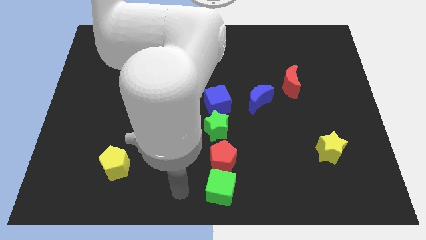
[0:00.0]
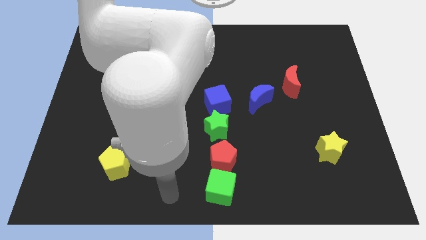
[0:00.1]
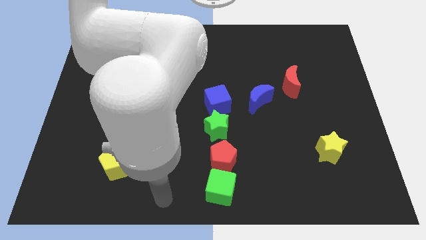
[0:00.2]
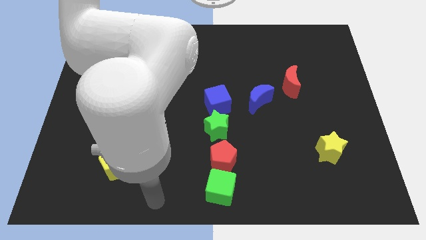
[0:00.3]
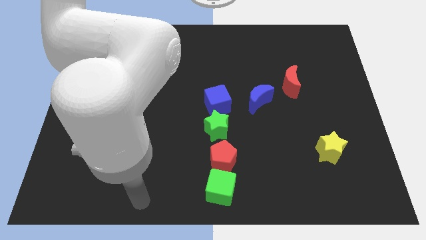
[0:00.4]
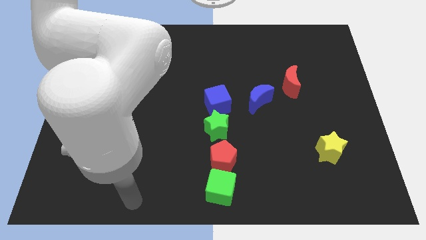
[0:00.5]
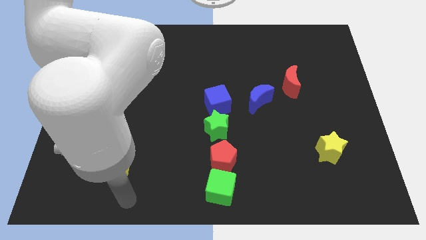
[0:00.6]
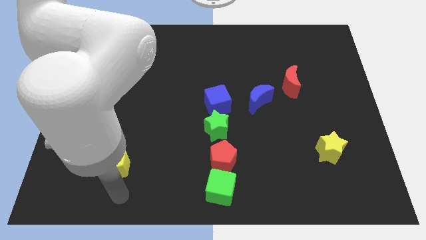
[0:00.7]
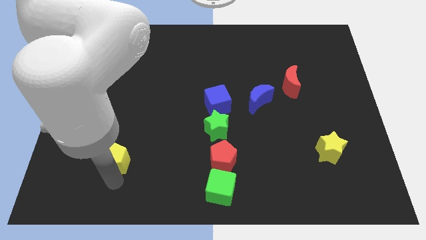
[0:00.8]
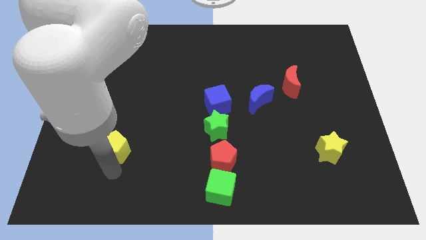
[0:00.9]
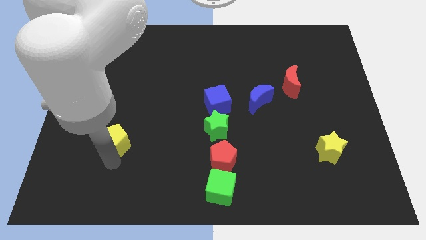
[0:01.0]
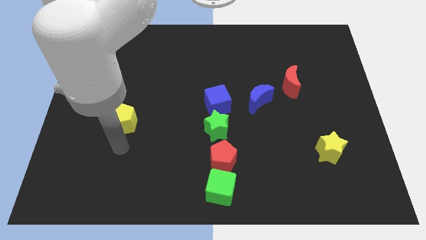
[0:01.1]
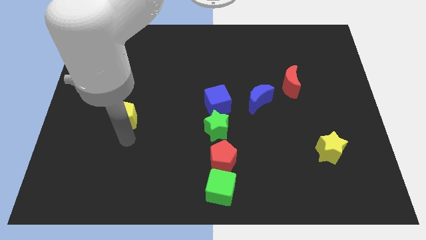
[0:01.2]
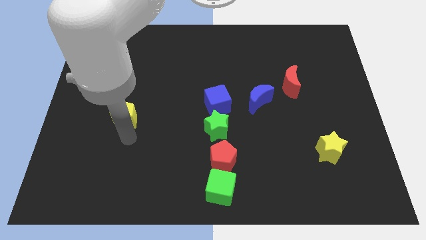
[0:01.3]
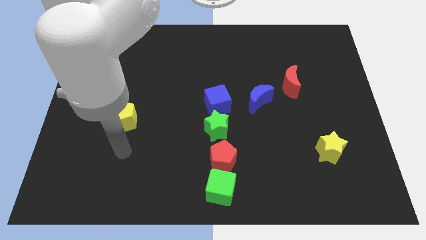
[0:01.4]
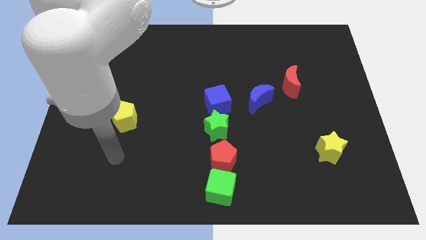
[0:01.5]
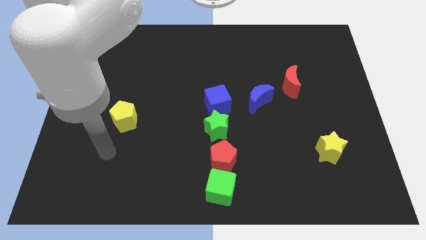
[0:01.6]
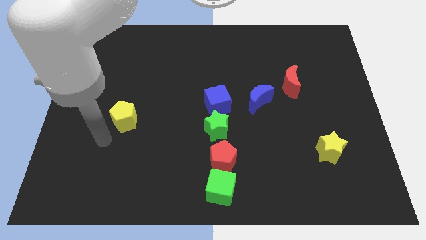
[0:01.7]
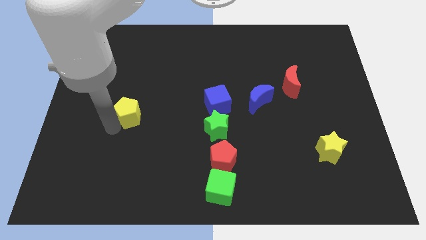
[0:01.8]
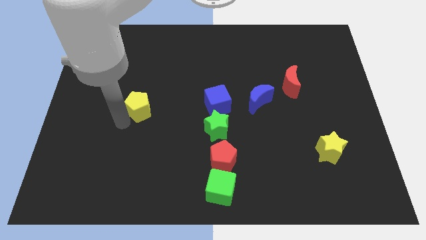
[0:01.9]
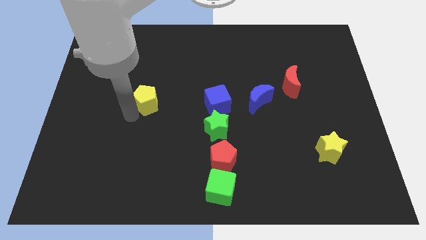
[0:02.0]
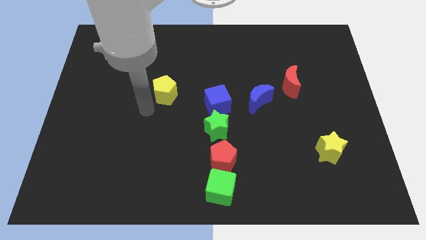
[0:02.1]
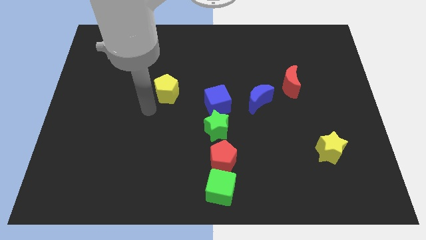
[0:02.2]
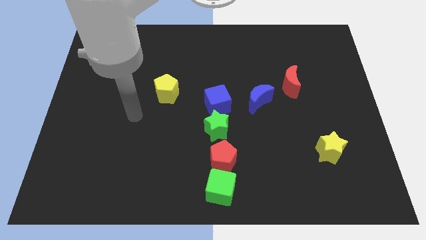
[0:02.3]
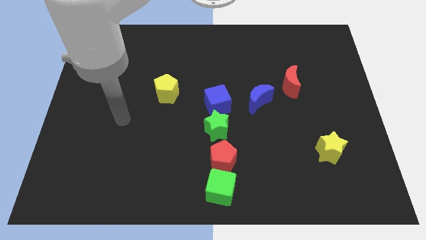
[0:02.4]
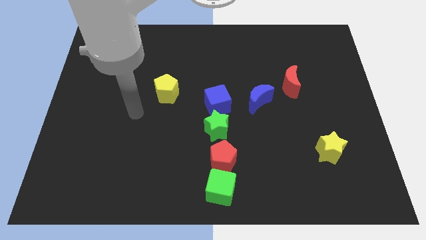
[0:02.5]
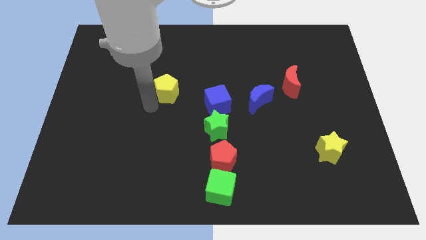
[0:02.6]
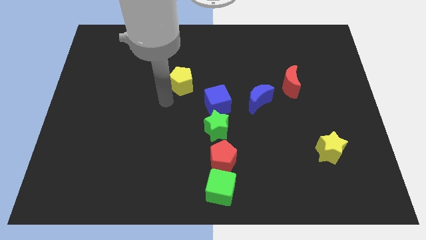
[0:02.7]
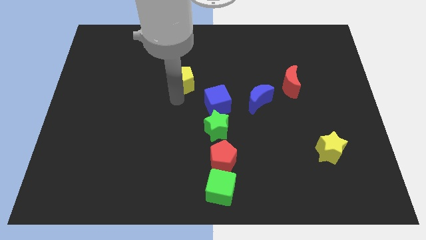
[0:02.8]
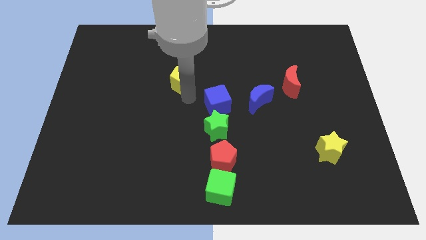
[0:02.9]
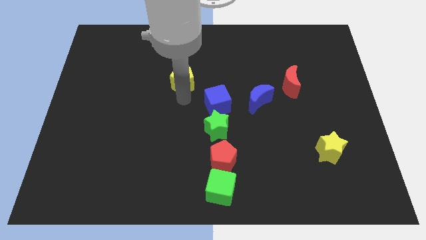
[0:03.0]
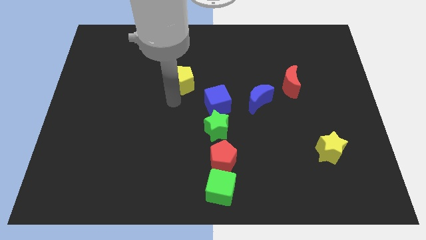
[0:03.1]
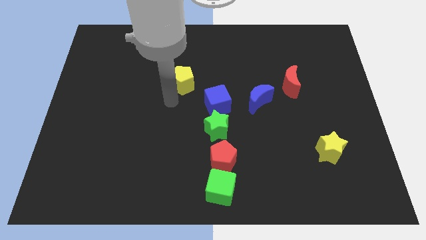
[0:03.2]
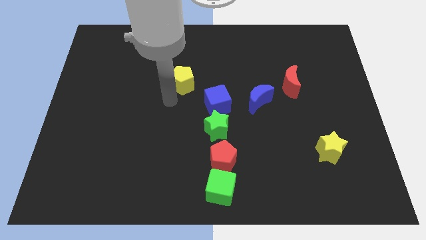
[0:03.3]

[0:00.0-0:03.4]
move the yellow pentagon towards upward

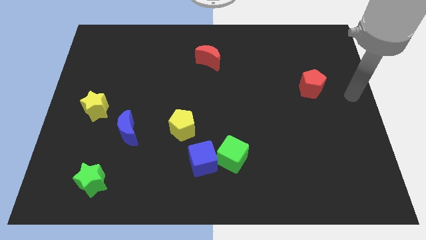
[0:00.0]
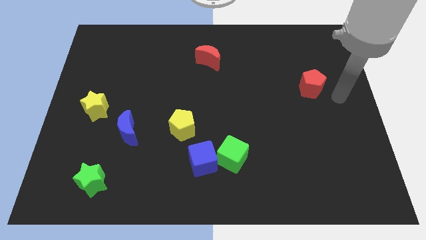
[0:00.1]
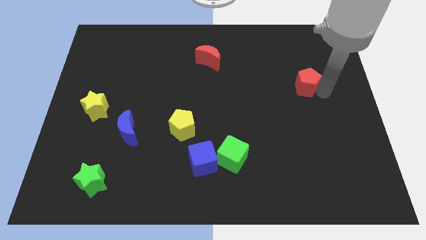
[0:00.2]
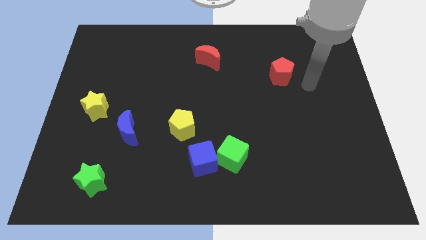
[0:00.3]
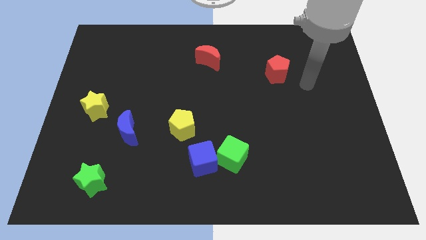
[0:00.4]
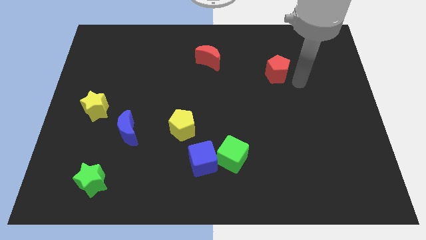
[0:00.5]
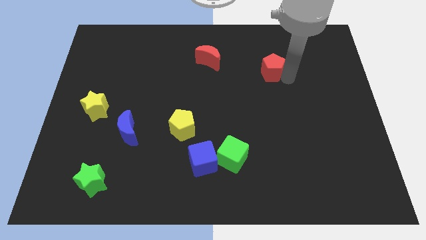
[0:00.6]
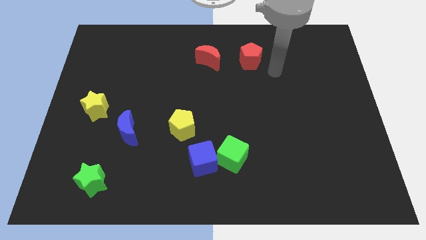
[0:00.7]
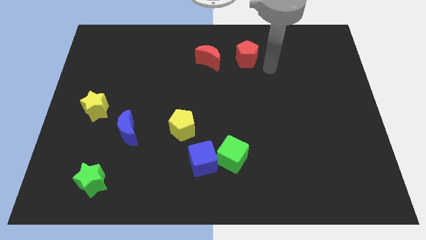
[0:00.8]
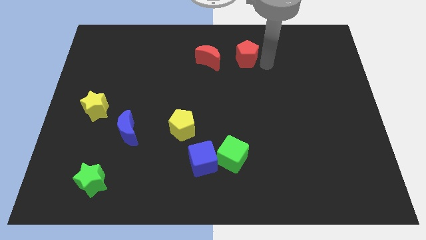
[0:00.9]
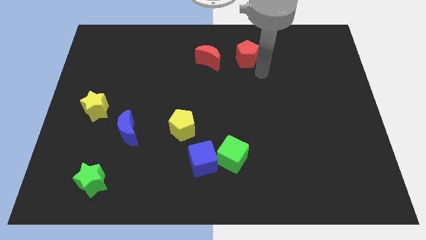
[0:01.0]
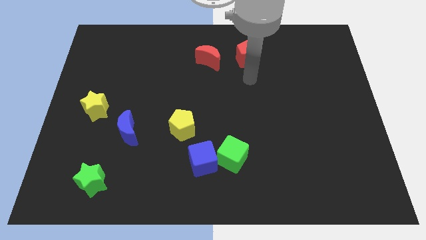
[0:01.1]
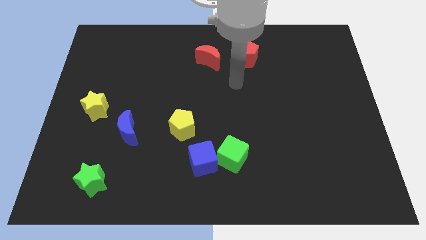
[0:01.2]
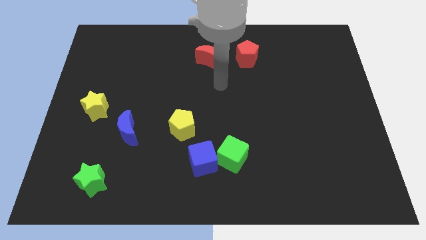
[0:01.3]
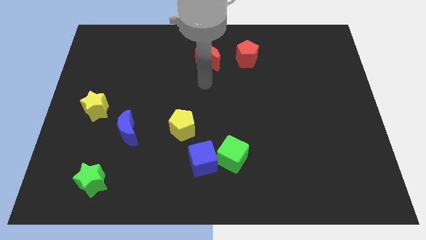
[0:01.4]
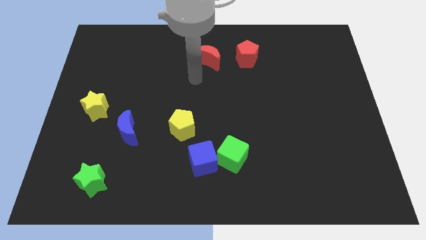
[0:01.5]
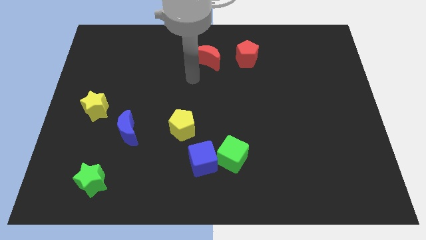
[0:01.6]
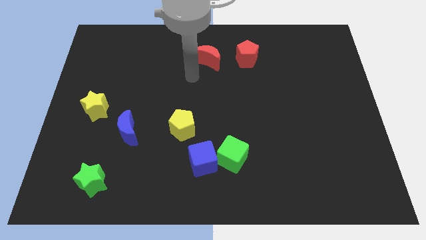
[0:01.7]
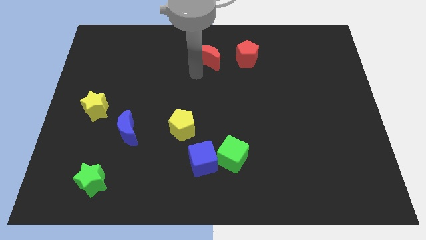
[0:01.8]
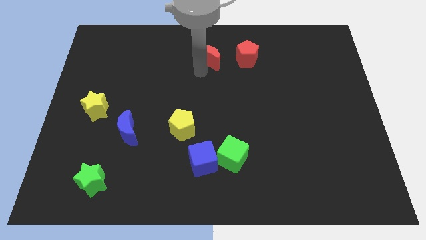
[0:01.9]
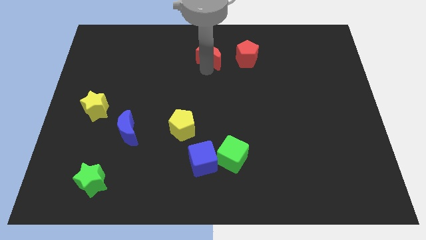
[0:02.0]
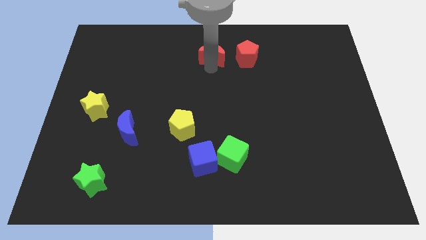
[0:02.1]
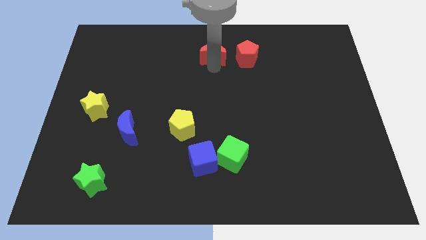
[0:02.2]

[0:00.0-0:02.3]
push the red pentagon towards the red moon

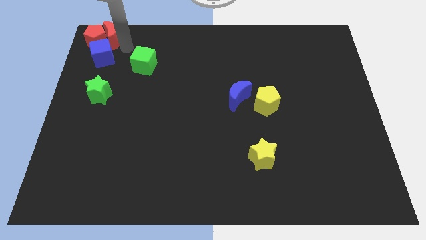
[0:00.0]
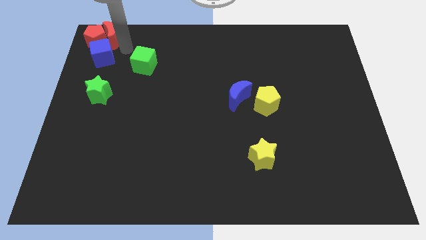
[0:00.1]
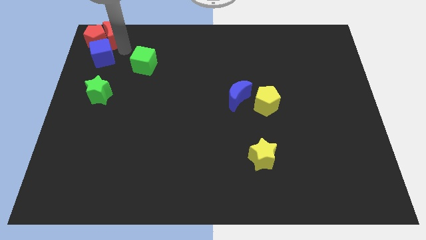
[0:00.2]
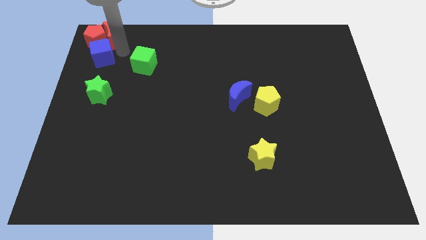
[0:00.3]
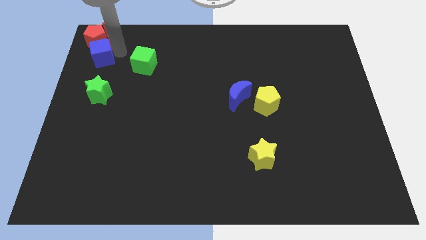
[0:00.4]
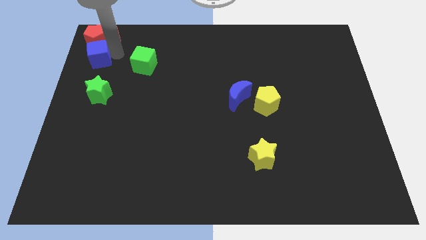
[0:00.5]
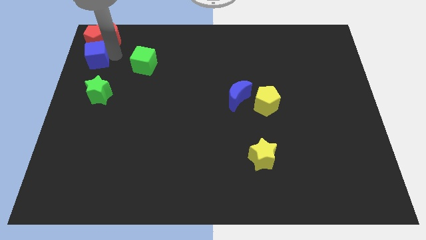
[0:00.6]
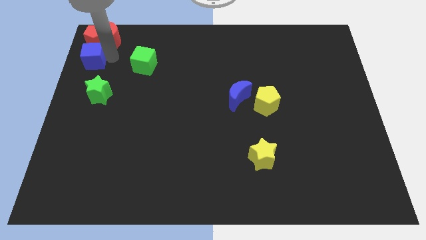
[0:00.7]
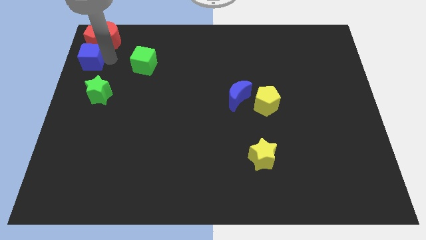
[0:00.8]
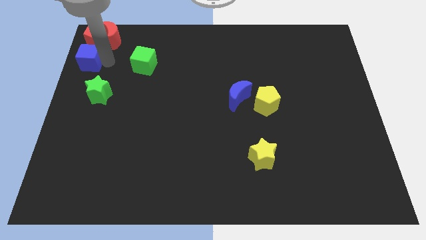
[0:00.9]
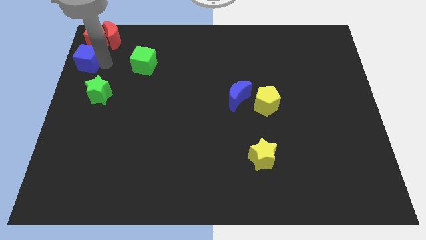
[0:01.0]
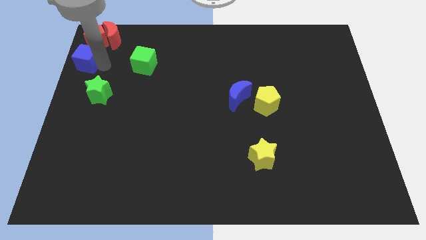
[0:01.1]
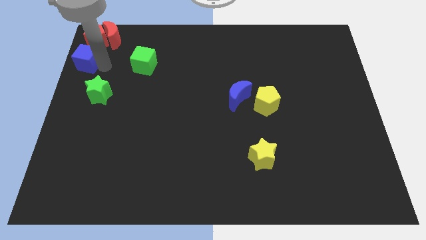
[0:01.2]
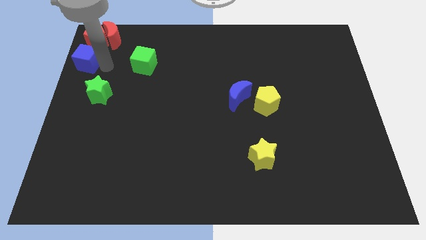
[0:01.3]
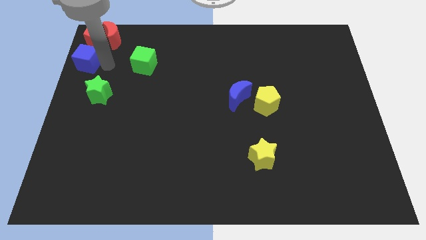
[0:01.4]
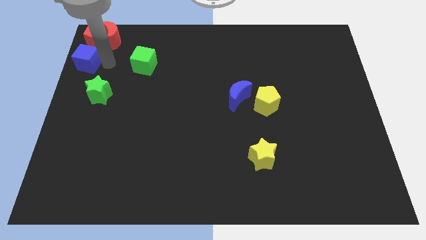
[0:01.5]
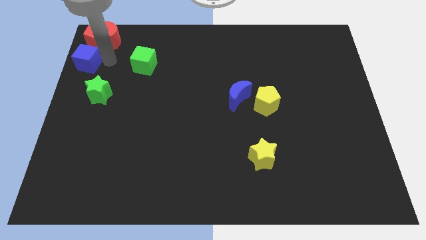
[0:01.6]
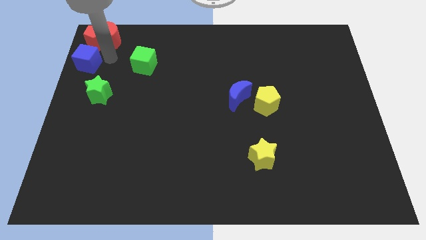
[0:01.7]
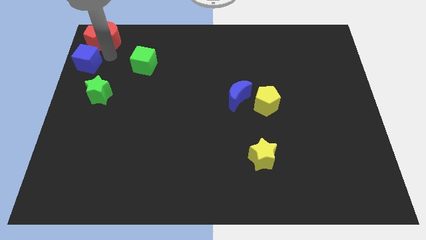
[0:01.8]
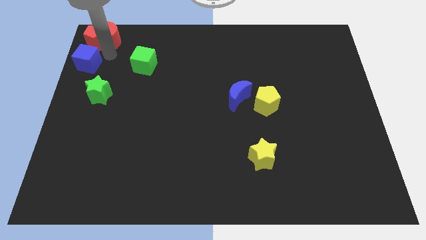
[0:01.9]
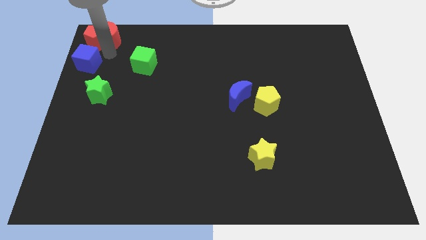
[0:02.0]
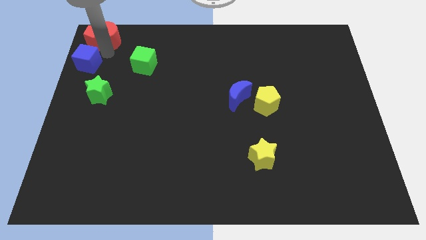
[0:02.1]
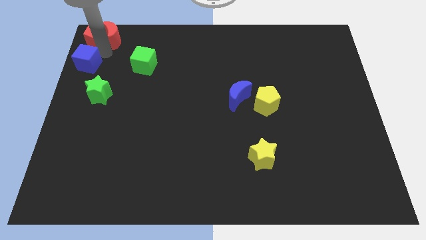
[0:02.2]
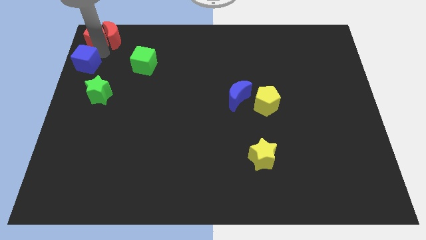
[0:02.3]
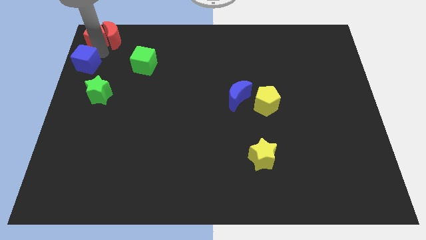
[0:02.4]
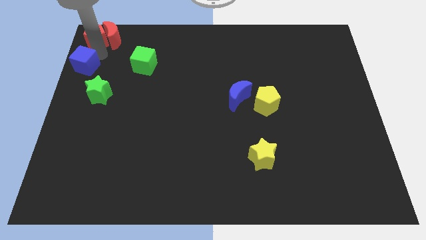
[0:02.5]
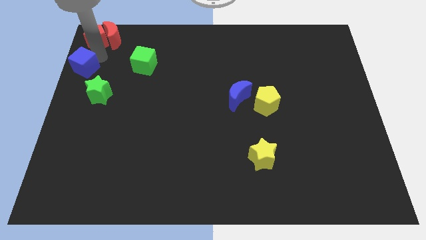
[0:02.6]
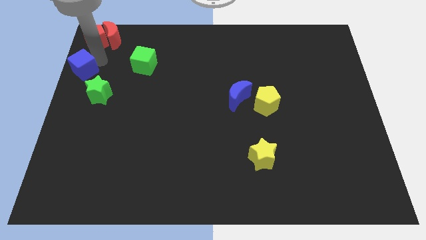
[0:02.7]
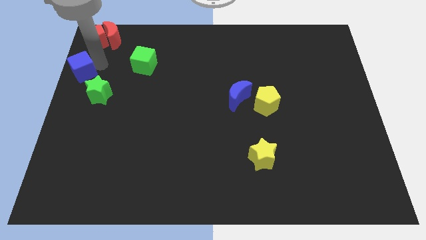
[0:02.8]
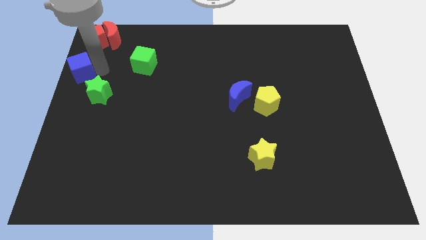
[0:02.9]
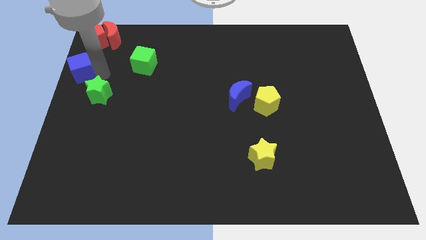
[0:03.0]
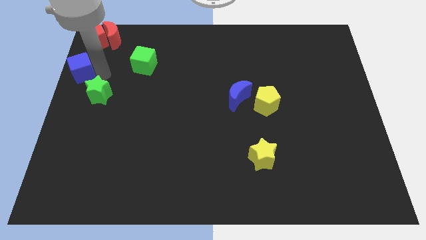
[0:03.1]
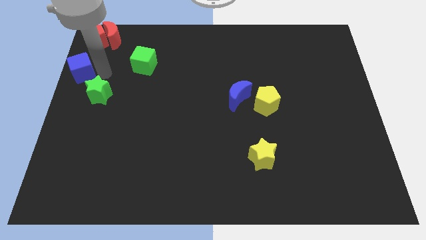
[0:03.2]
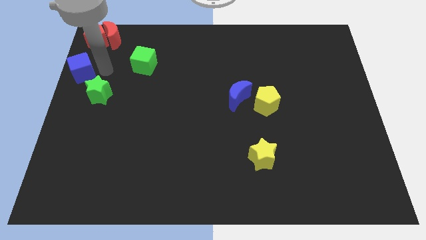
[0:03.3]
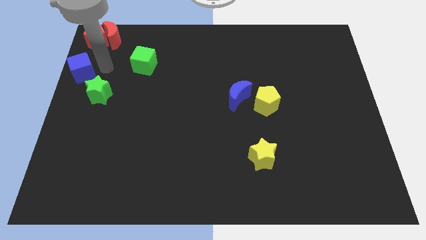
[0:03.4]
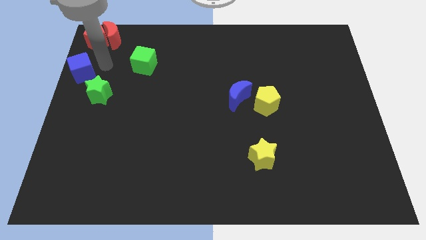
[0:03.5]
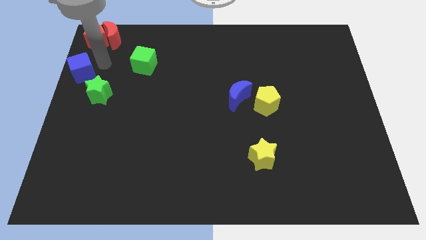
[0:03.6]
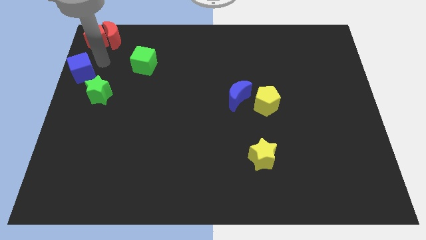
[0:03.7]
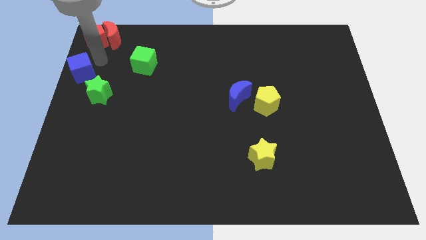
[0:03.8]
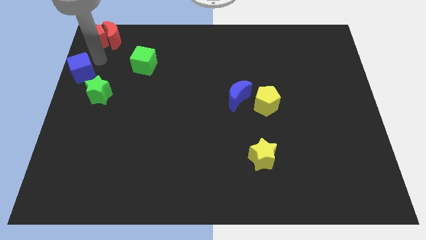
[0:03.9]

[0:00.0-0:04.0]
move the blue cube slightly towards the left centre
